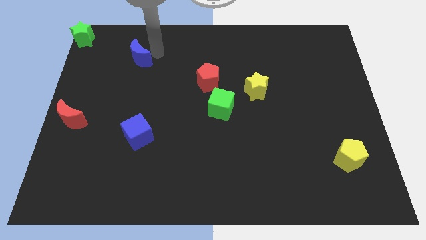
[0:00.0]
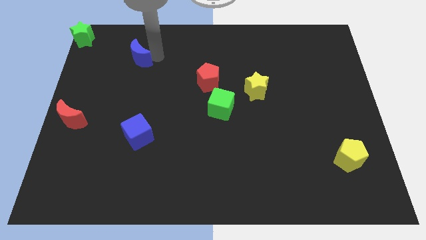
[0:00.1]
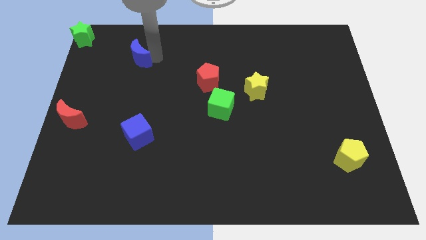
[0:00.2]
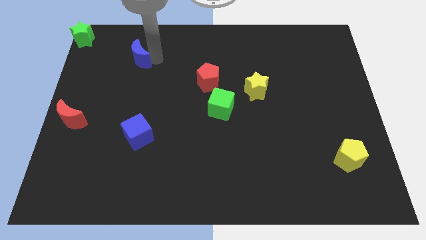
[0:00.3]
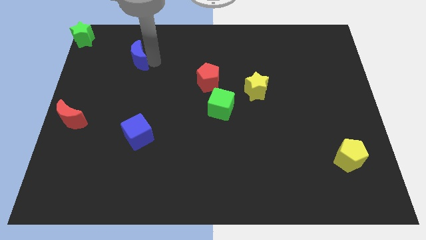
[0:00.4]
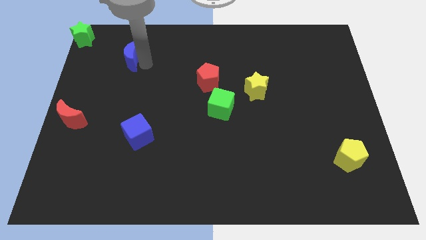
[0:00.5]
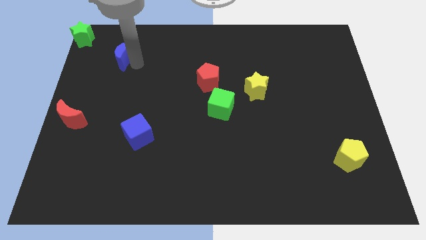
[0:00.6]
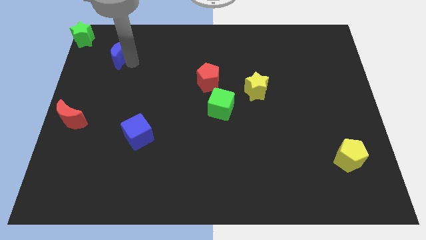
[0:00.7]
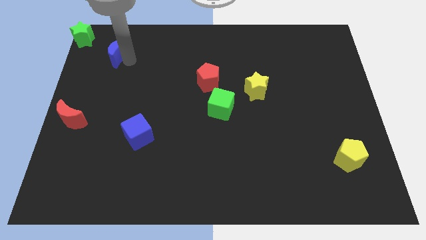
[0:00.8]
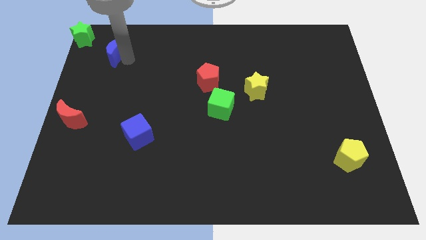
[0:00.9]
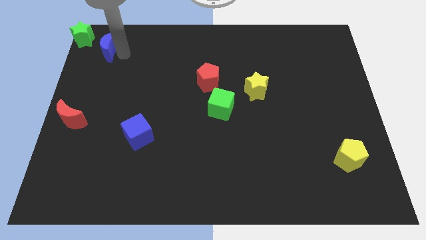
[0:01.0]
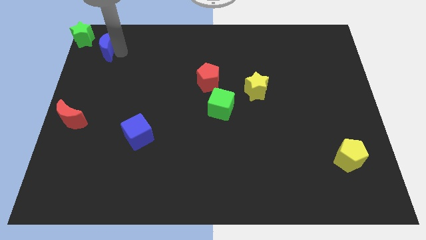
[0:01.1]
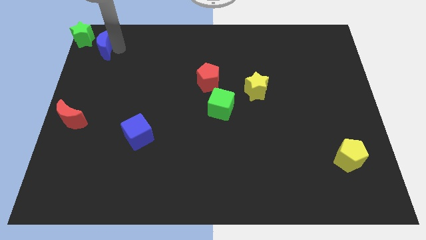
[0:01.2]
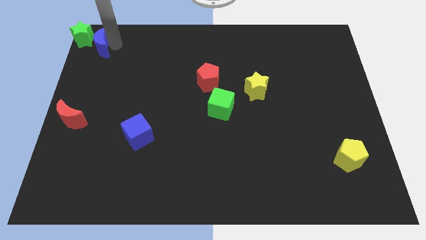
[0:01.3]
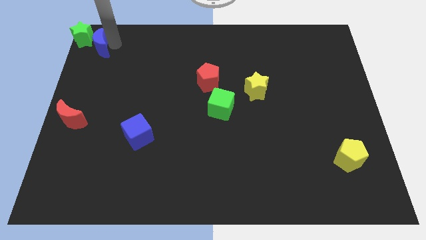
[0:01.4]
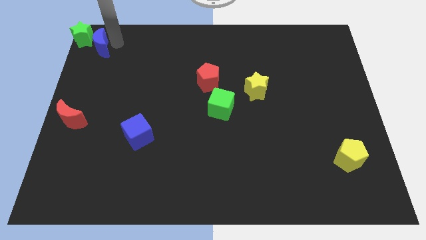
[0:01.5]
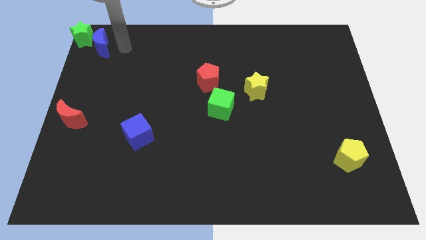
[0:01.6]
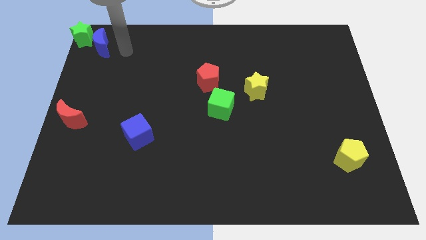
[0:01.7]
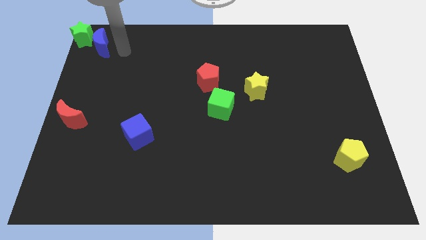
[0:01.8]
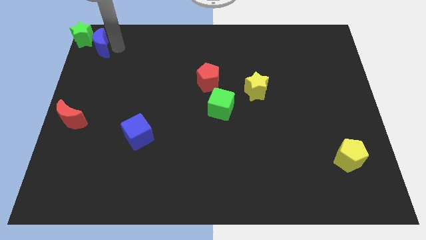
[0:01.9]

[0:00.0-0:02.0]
attach the blue moon to the green star

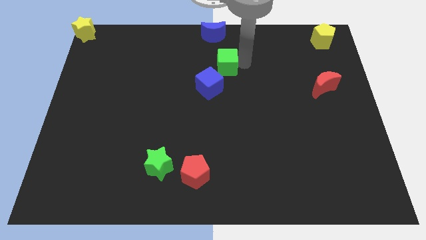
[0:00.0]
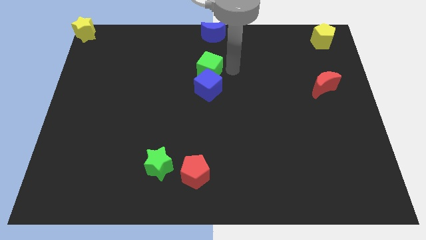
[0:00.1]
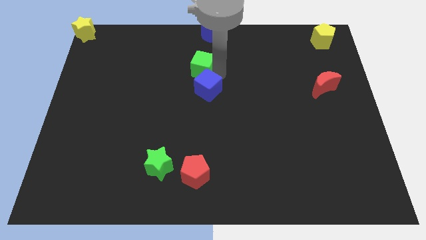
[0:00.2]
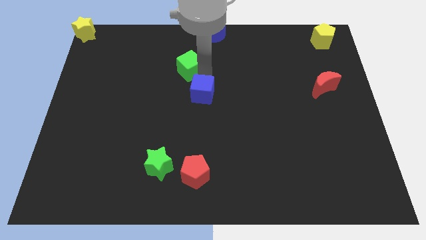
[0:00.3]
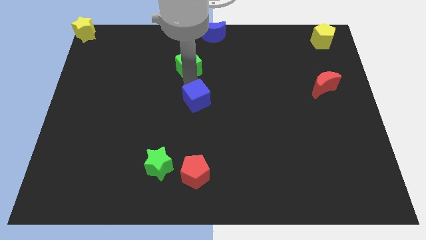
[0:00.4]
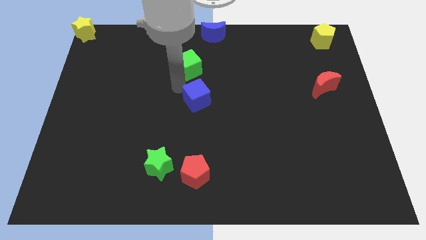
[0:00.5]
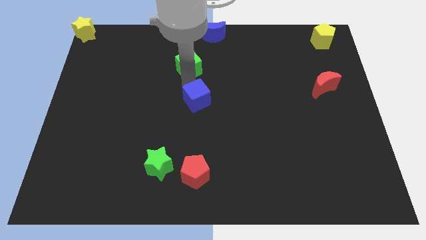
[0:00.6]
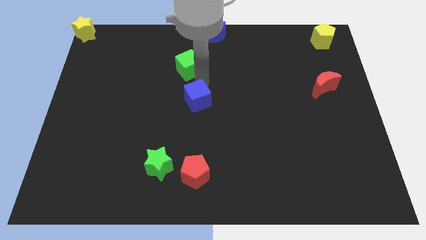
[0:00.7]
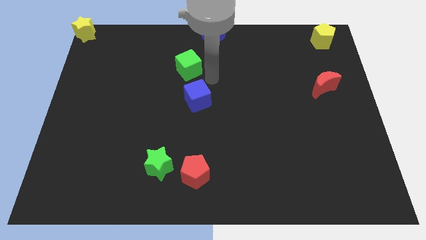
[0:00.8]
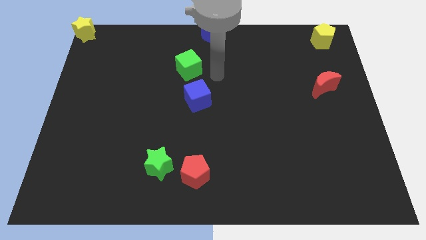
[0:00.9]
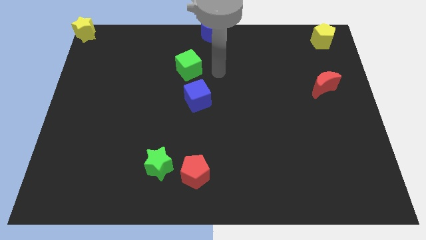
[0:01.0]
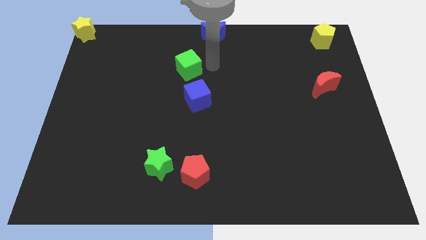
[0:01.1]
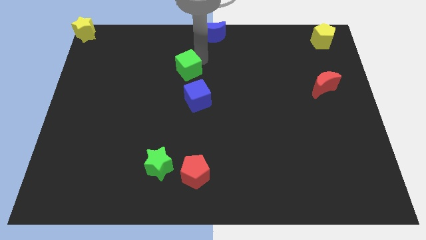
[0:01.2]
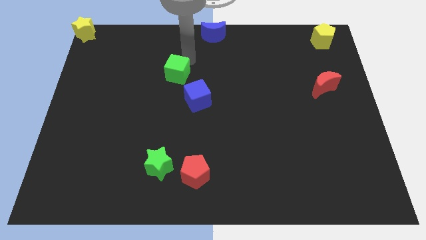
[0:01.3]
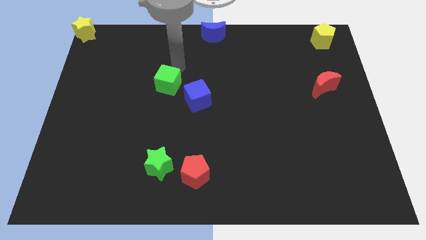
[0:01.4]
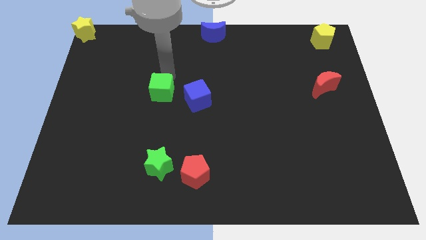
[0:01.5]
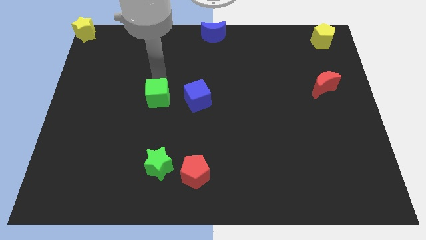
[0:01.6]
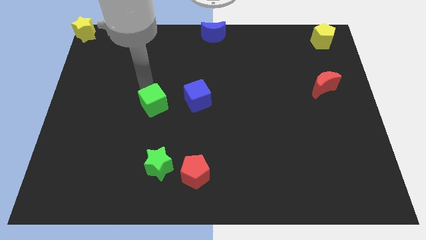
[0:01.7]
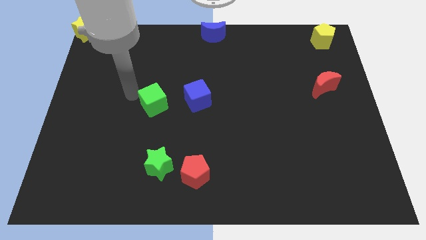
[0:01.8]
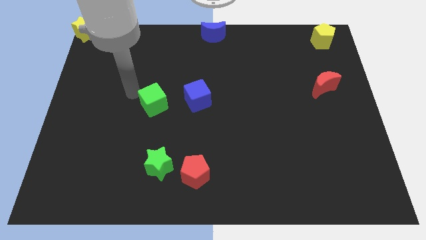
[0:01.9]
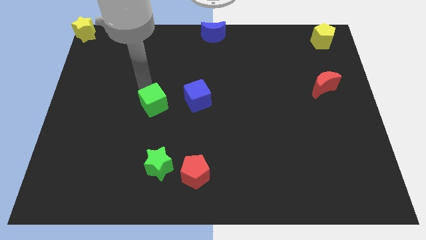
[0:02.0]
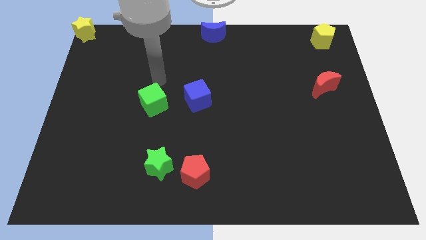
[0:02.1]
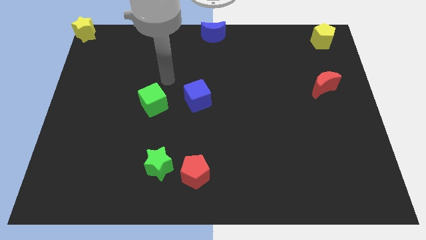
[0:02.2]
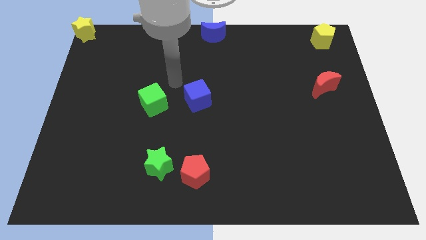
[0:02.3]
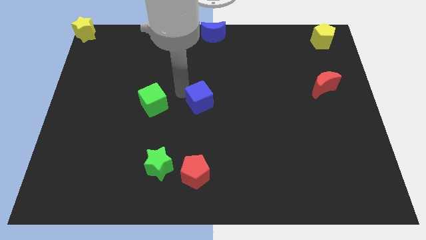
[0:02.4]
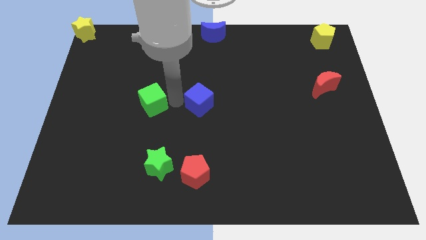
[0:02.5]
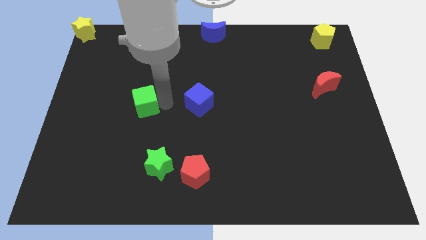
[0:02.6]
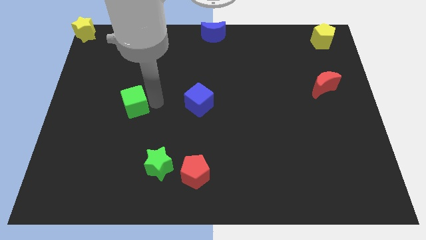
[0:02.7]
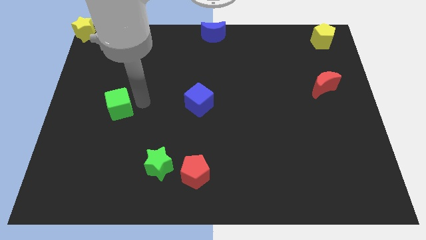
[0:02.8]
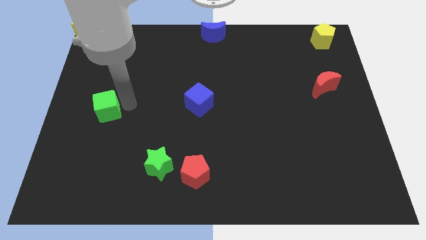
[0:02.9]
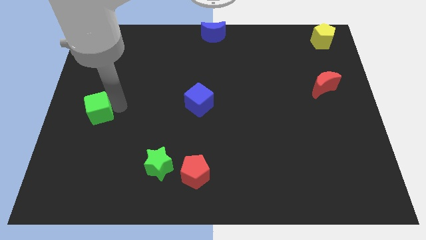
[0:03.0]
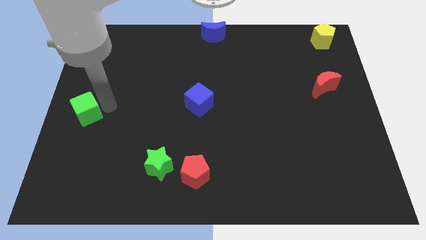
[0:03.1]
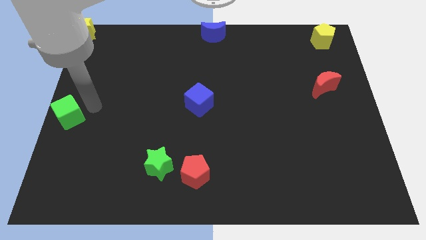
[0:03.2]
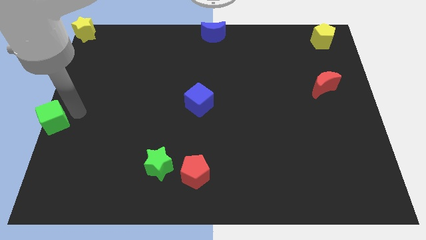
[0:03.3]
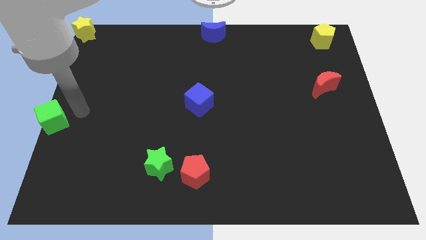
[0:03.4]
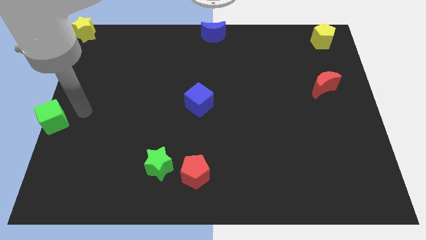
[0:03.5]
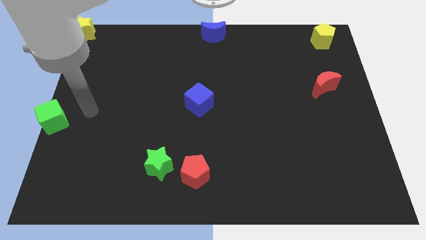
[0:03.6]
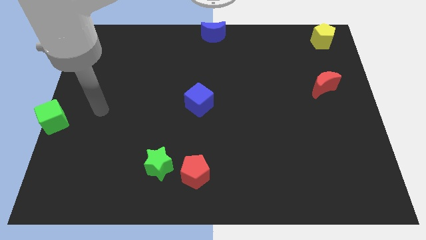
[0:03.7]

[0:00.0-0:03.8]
place green cube to left bottom

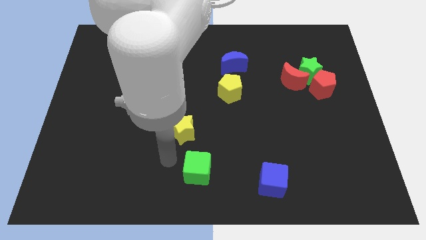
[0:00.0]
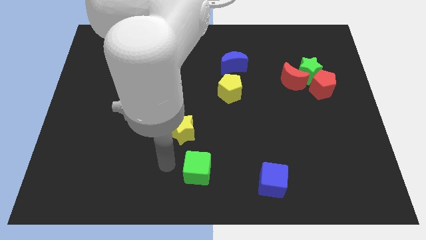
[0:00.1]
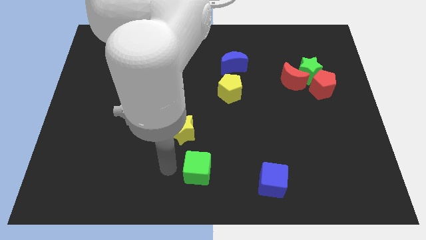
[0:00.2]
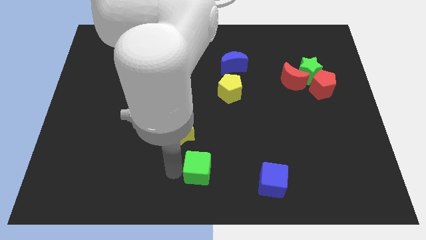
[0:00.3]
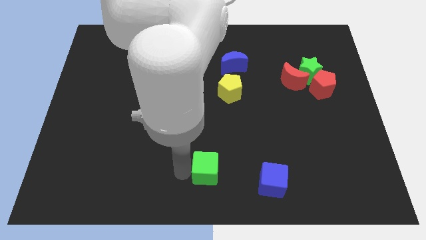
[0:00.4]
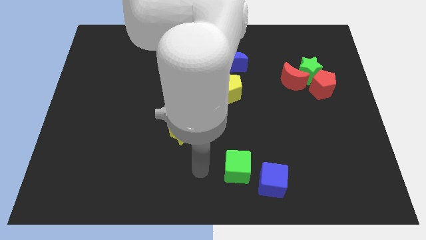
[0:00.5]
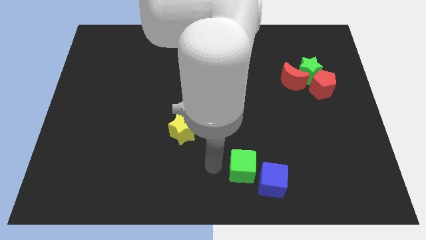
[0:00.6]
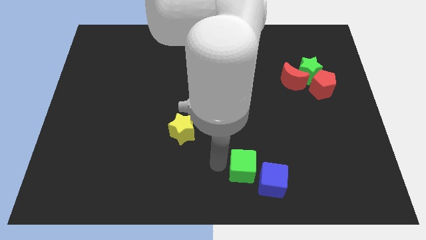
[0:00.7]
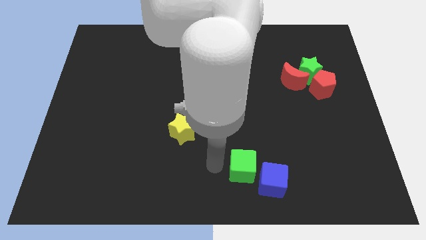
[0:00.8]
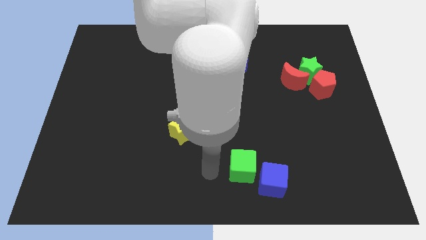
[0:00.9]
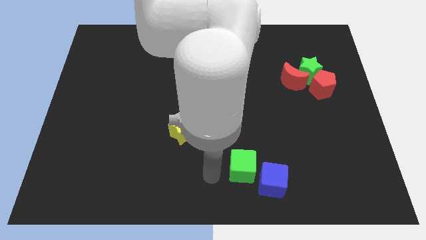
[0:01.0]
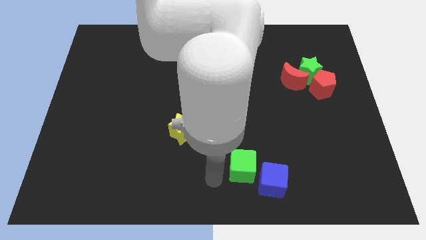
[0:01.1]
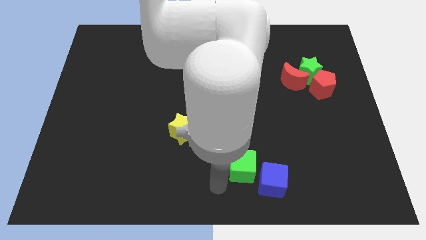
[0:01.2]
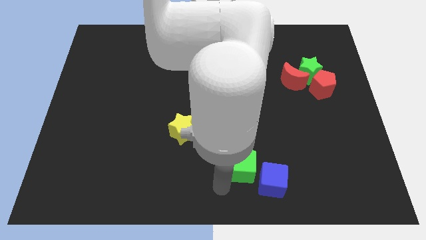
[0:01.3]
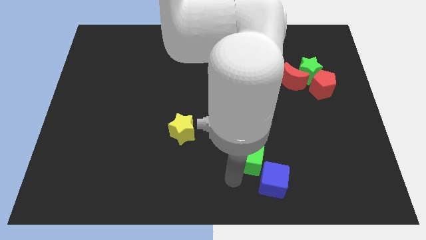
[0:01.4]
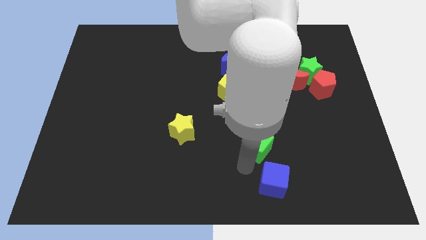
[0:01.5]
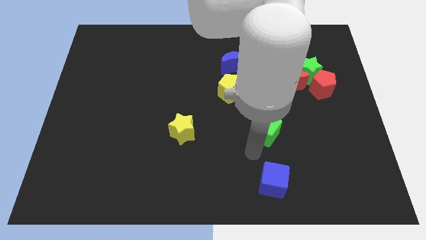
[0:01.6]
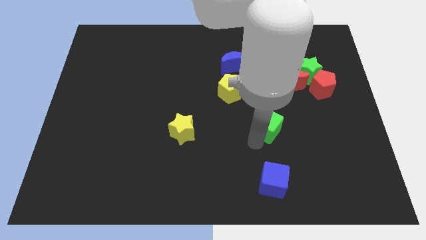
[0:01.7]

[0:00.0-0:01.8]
push green cube towards the red crescent

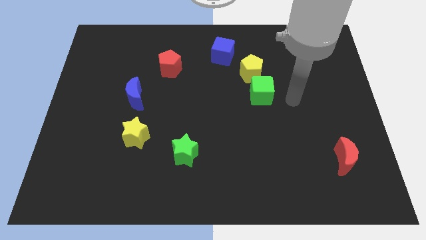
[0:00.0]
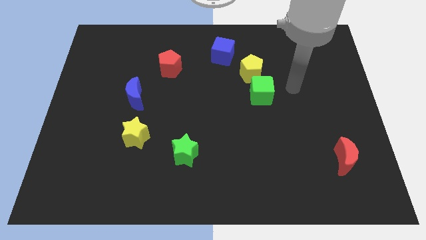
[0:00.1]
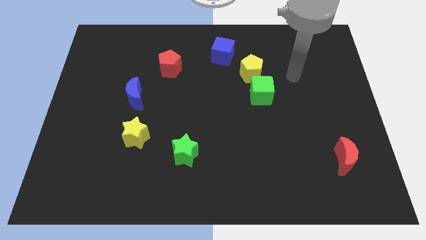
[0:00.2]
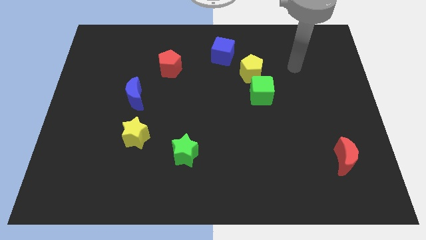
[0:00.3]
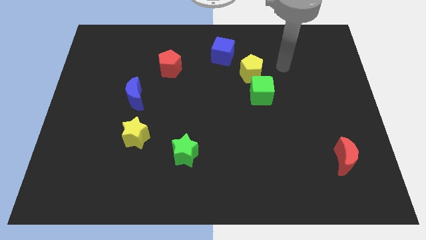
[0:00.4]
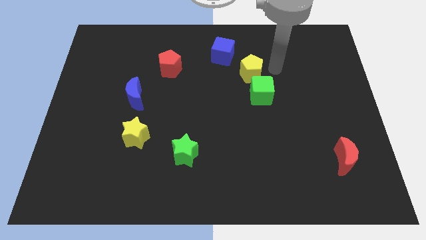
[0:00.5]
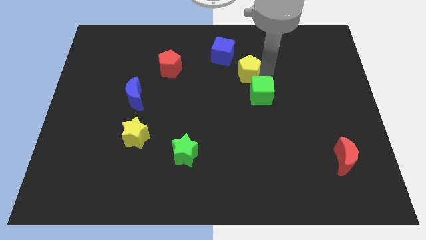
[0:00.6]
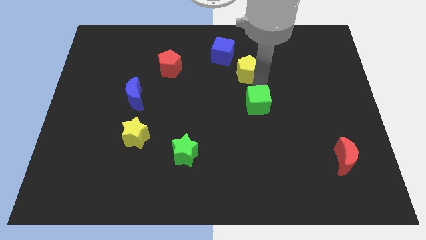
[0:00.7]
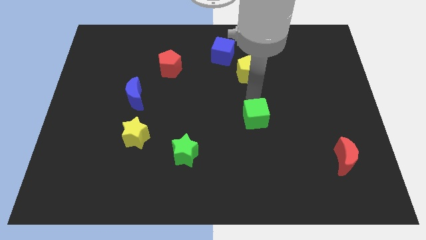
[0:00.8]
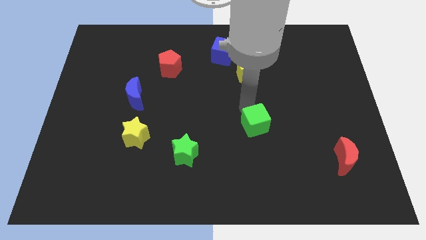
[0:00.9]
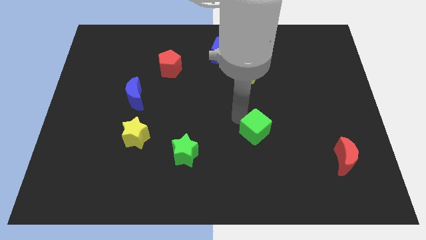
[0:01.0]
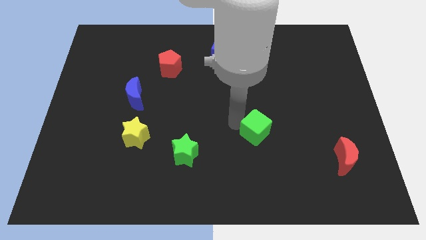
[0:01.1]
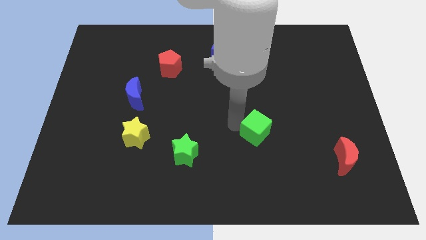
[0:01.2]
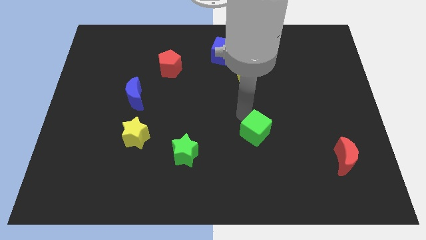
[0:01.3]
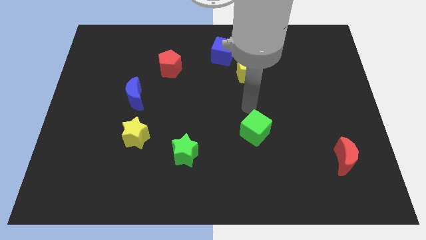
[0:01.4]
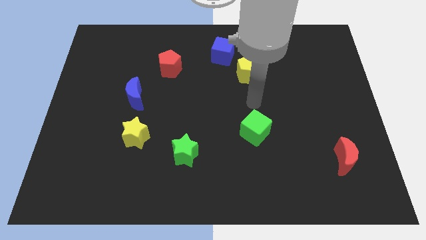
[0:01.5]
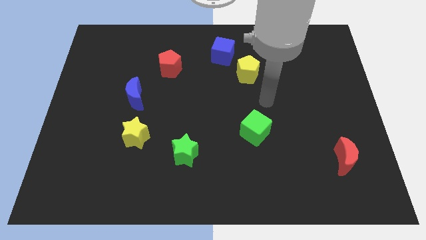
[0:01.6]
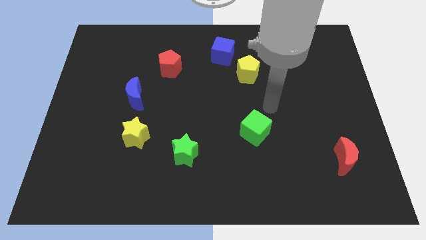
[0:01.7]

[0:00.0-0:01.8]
separate the yellow pentagon and the green cube
